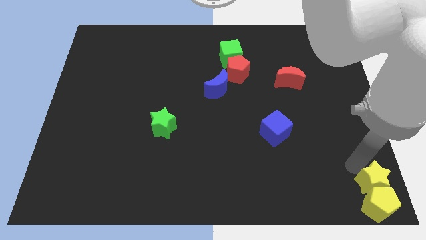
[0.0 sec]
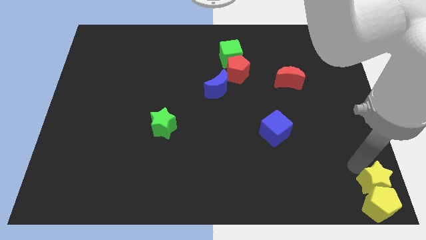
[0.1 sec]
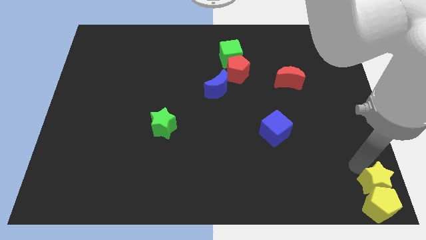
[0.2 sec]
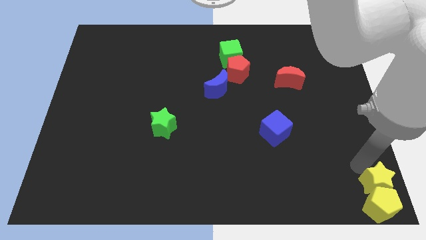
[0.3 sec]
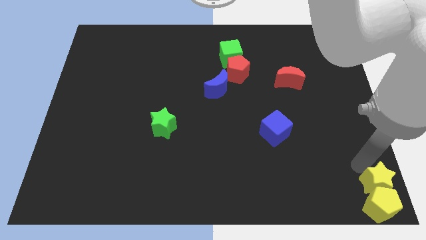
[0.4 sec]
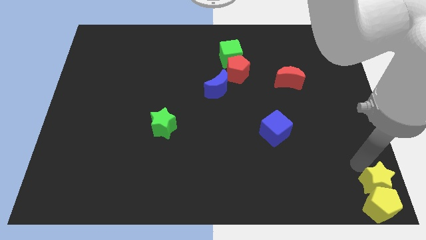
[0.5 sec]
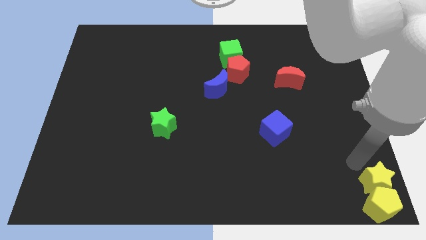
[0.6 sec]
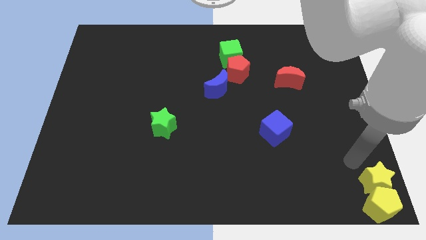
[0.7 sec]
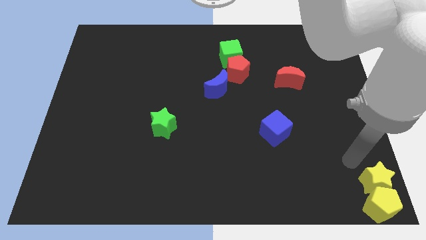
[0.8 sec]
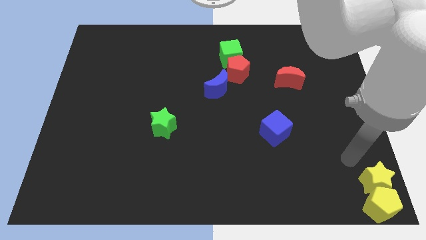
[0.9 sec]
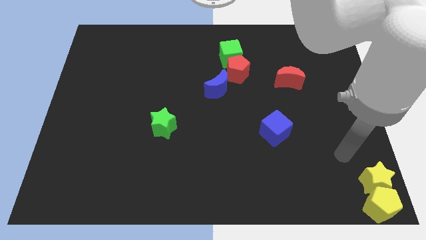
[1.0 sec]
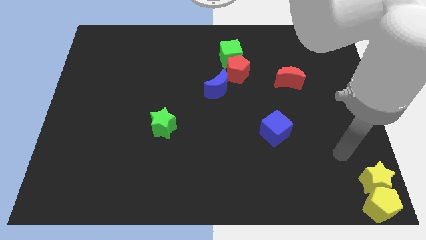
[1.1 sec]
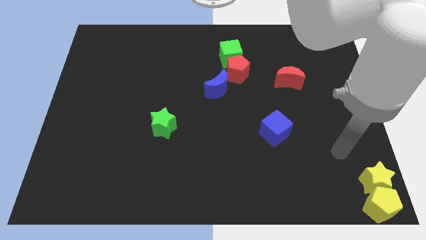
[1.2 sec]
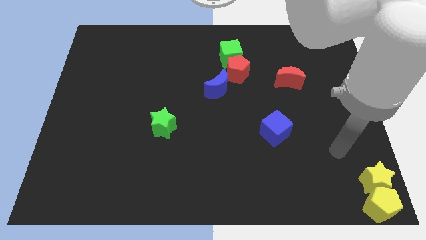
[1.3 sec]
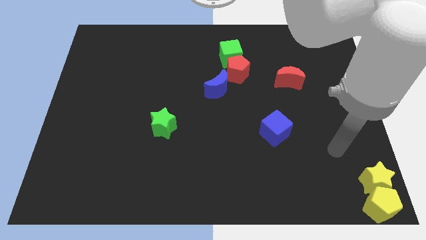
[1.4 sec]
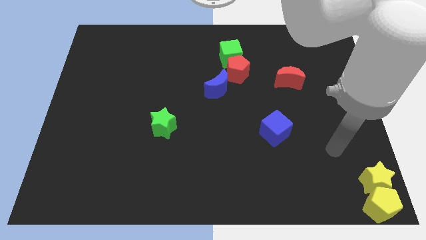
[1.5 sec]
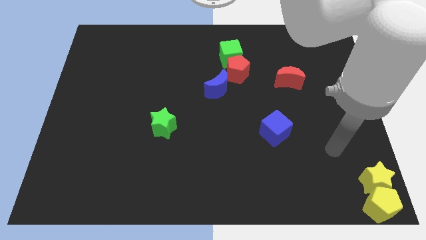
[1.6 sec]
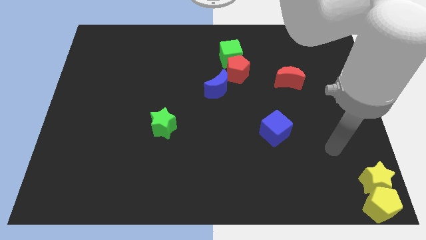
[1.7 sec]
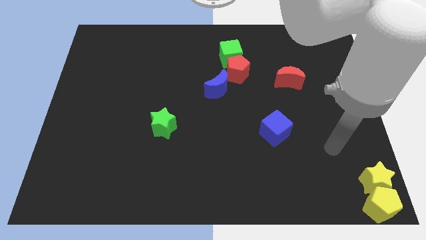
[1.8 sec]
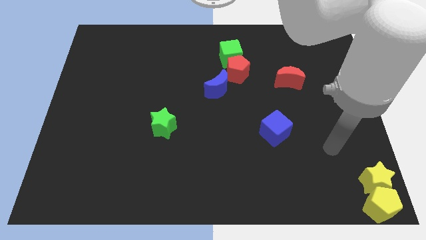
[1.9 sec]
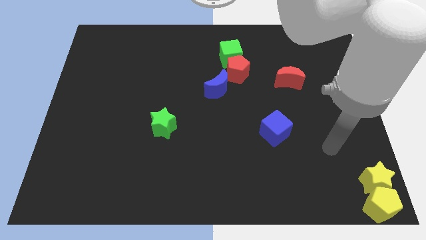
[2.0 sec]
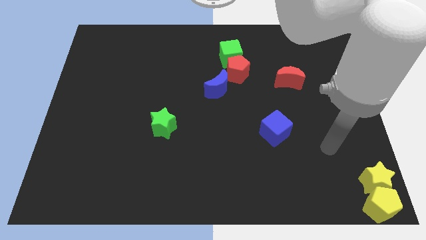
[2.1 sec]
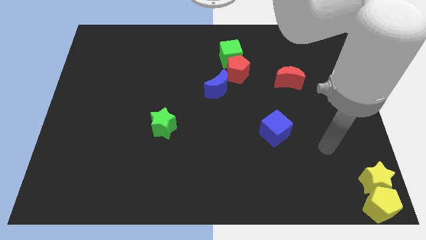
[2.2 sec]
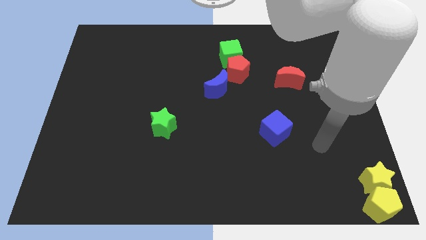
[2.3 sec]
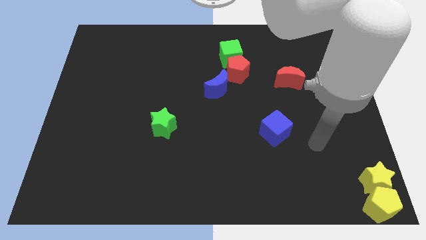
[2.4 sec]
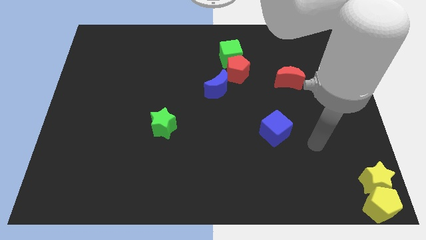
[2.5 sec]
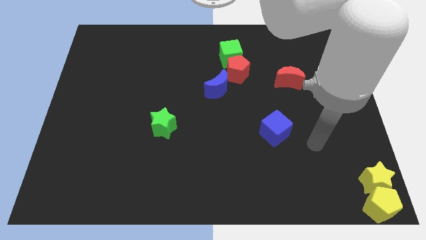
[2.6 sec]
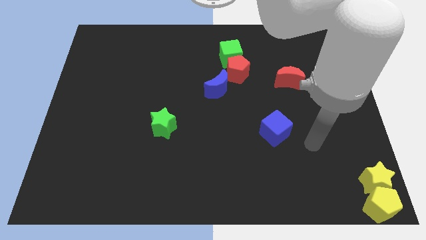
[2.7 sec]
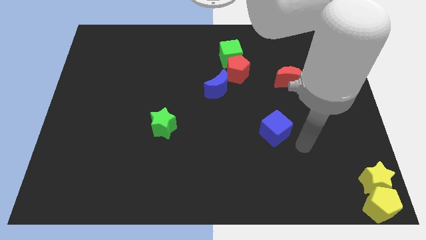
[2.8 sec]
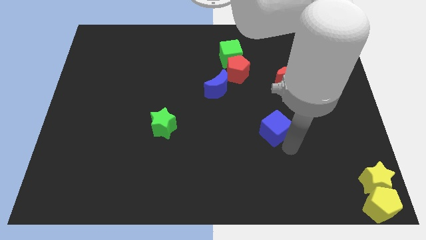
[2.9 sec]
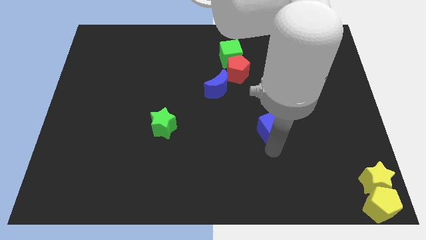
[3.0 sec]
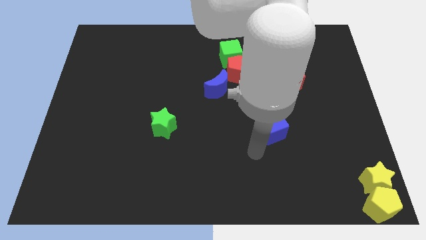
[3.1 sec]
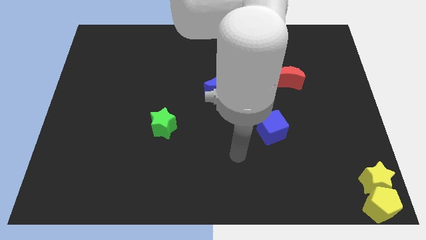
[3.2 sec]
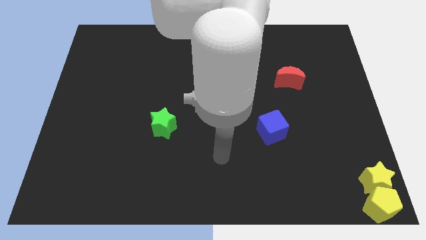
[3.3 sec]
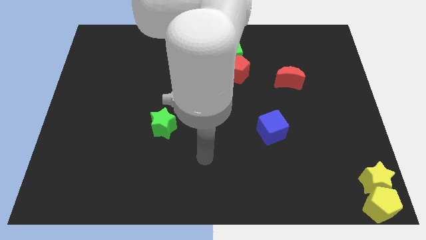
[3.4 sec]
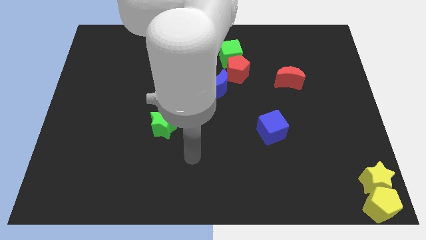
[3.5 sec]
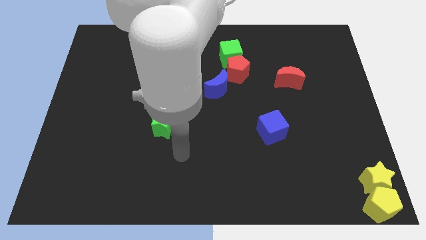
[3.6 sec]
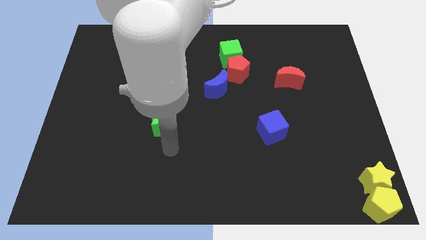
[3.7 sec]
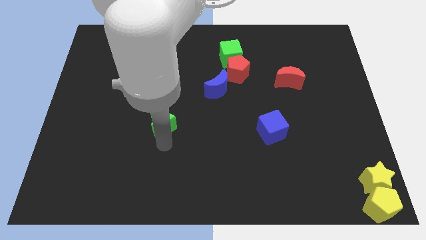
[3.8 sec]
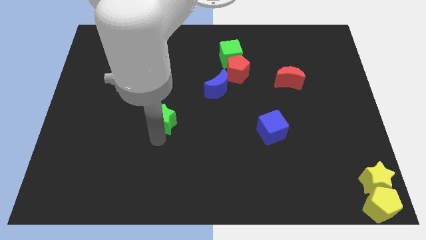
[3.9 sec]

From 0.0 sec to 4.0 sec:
move your arm towards the green star

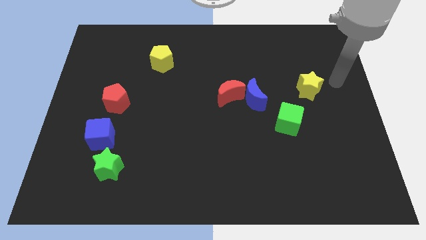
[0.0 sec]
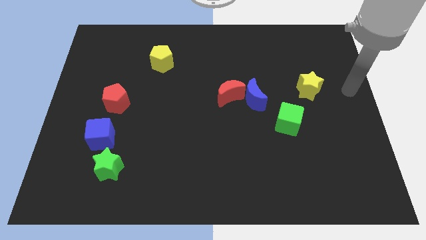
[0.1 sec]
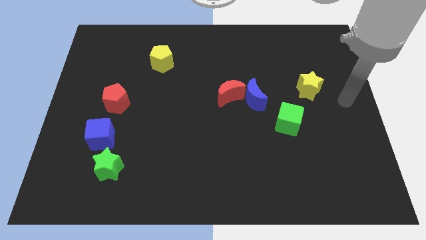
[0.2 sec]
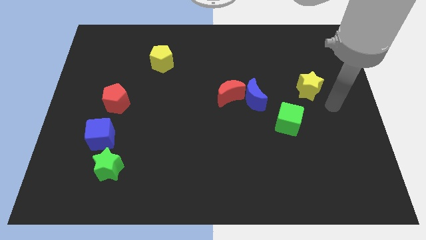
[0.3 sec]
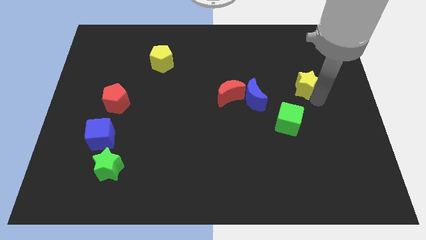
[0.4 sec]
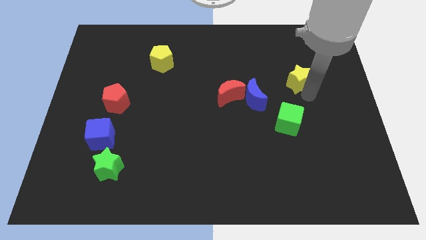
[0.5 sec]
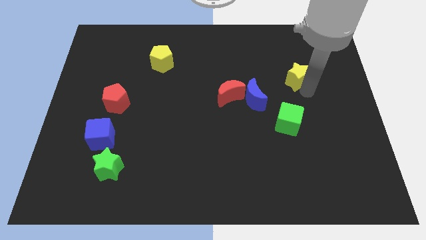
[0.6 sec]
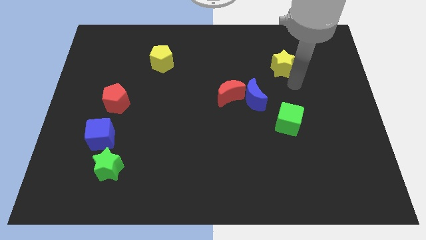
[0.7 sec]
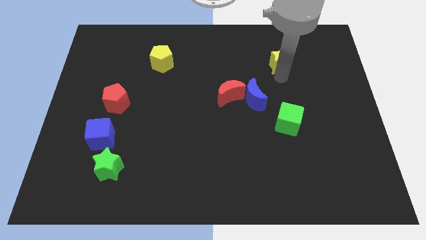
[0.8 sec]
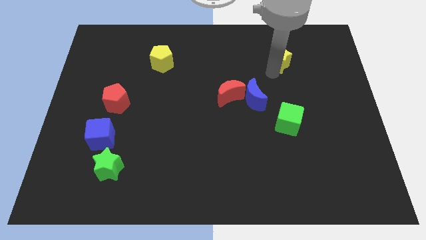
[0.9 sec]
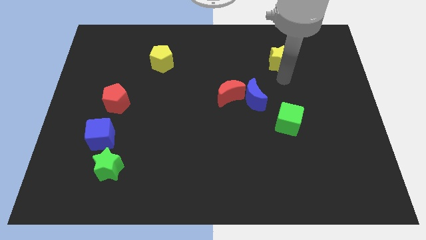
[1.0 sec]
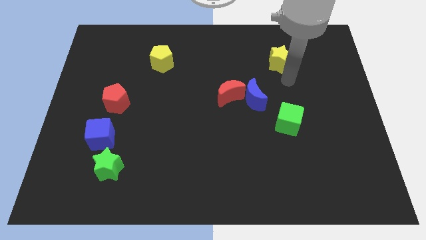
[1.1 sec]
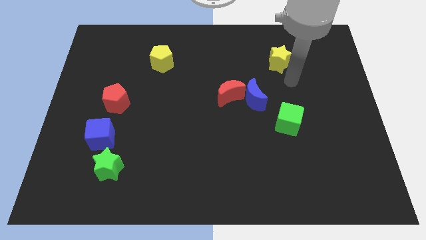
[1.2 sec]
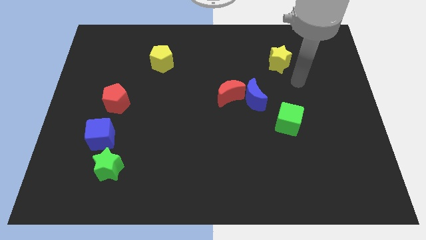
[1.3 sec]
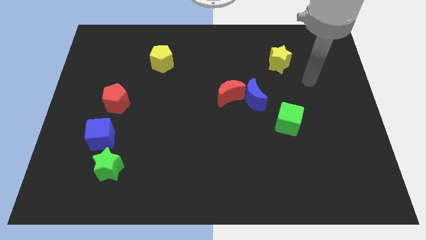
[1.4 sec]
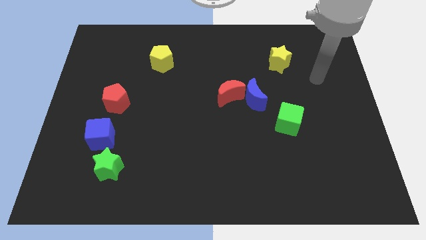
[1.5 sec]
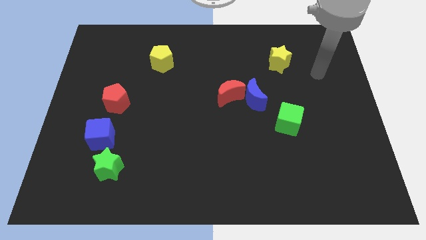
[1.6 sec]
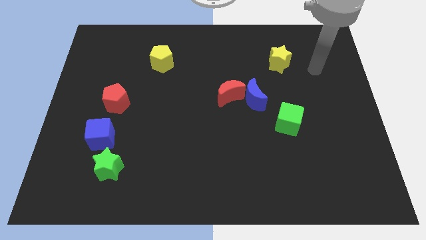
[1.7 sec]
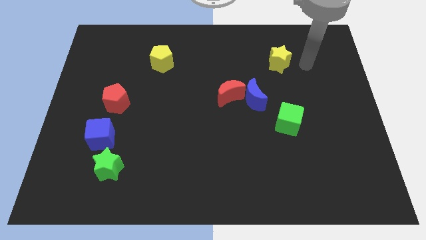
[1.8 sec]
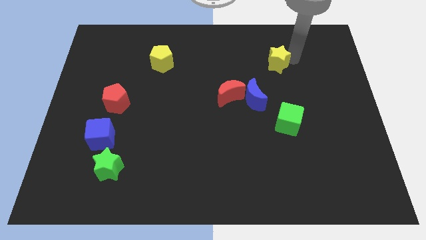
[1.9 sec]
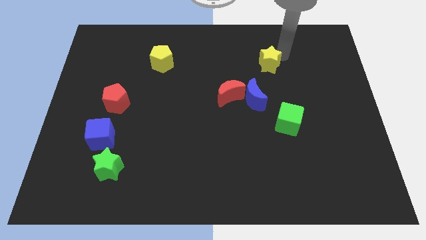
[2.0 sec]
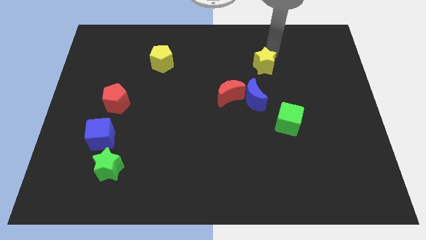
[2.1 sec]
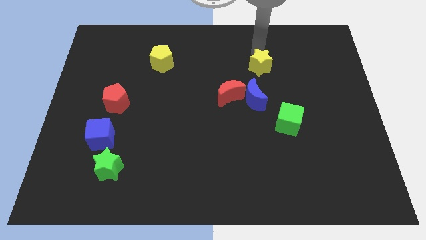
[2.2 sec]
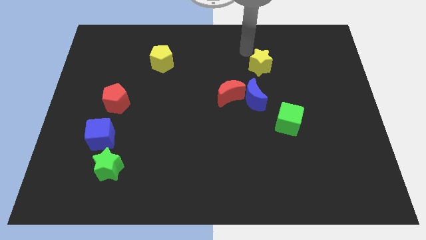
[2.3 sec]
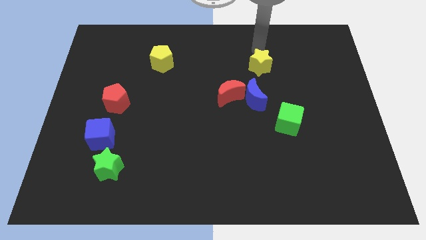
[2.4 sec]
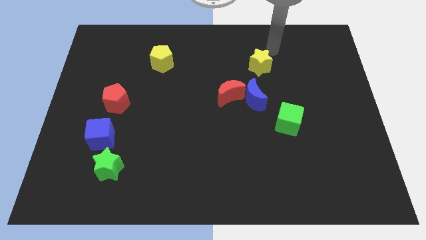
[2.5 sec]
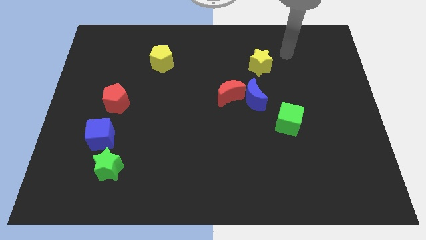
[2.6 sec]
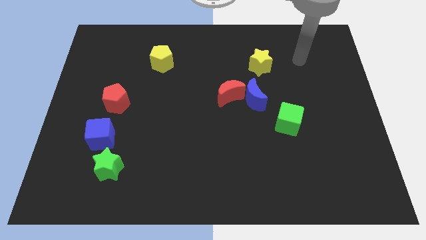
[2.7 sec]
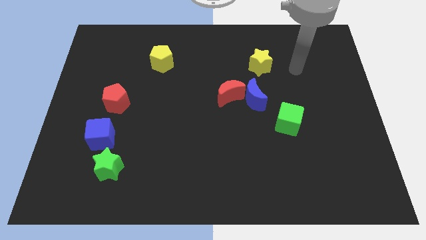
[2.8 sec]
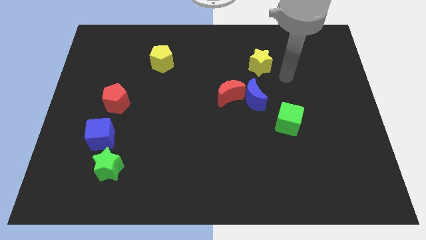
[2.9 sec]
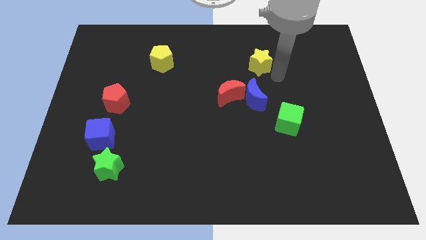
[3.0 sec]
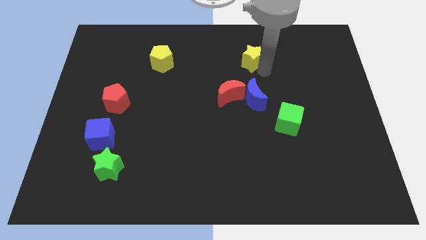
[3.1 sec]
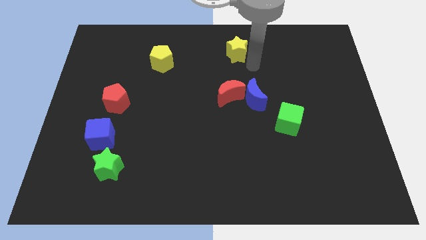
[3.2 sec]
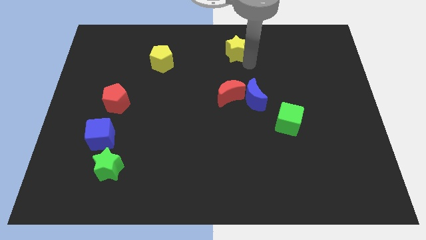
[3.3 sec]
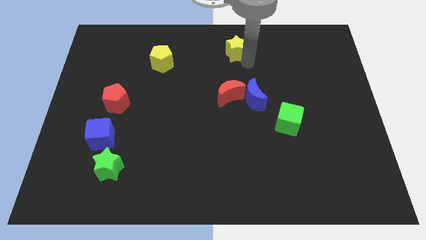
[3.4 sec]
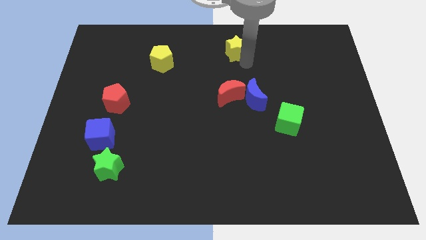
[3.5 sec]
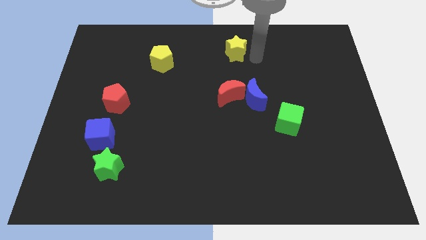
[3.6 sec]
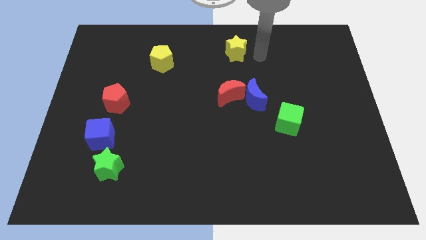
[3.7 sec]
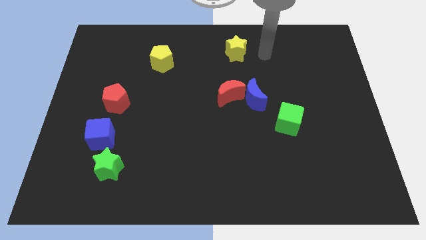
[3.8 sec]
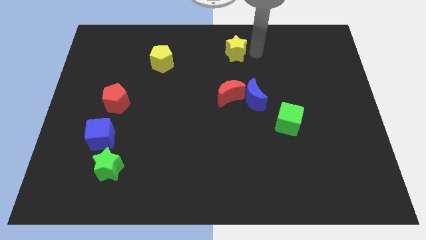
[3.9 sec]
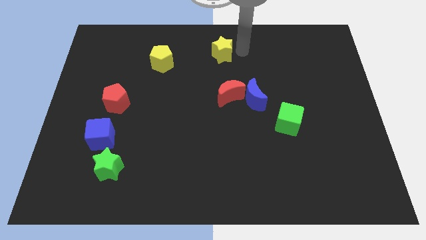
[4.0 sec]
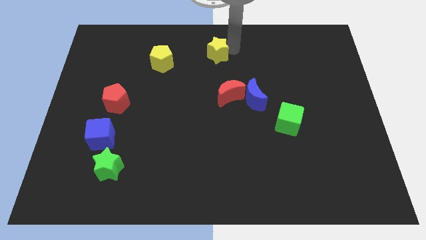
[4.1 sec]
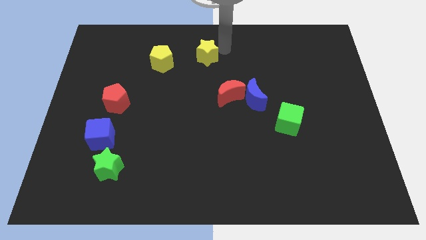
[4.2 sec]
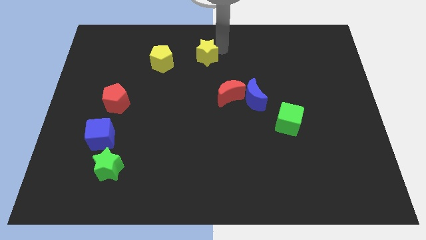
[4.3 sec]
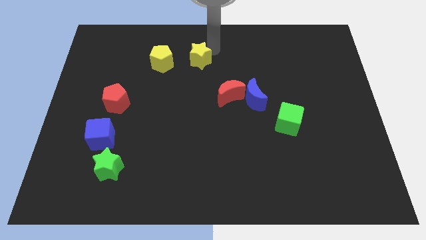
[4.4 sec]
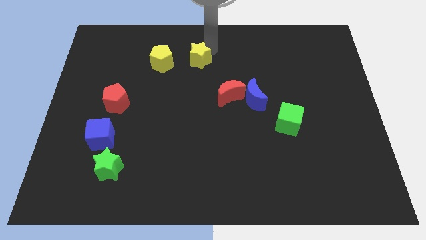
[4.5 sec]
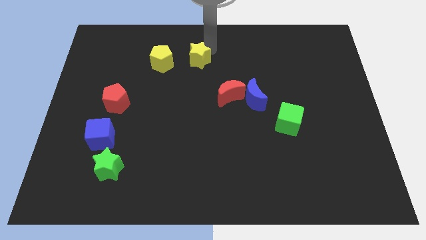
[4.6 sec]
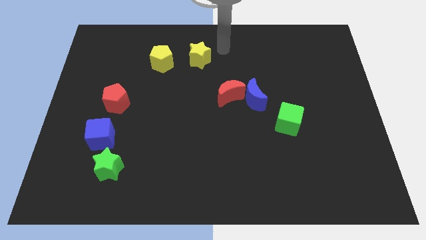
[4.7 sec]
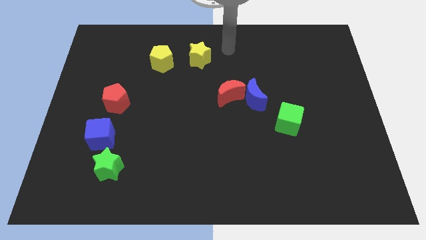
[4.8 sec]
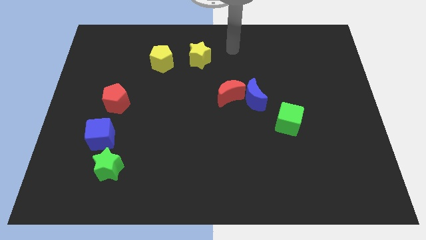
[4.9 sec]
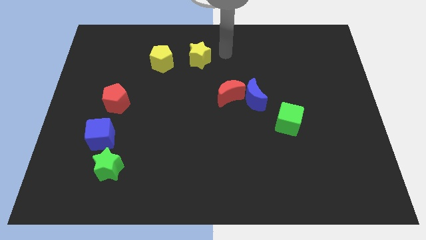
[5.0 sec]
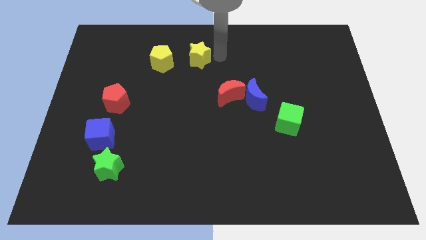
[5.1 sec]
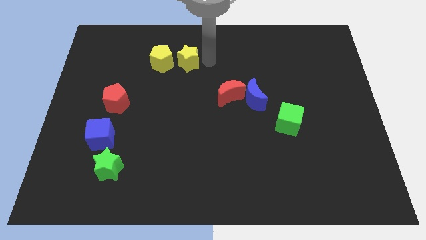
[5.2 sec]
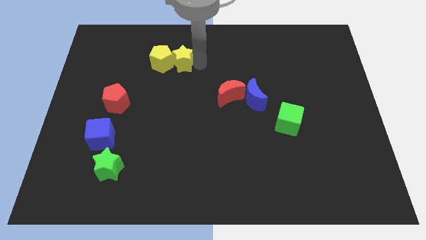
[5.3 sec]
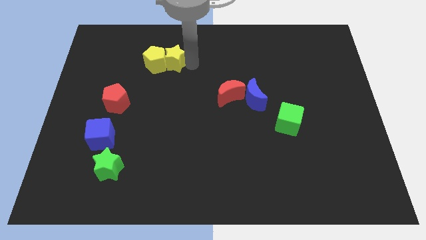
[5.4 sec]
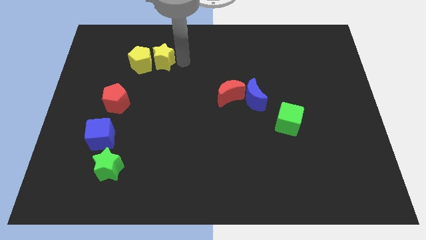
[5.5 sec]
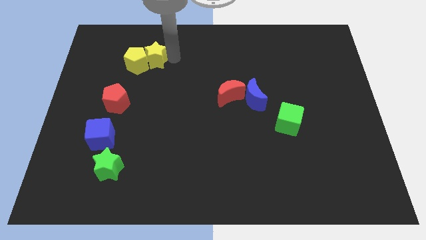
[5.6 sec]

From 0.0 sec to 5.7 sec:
push the yellow star into the yellow pentagon
